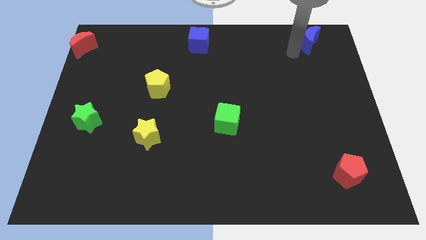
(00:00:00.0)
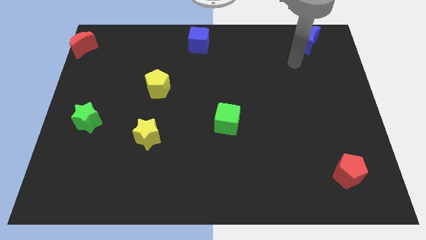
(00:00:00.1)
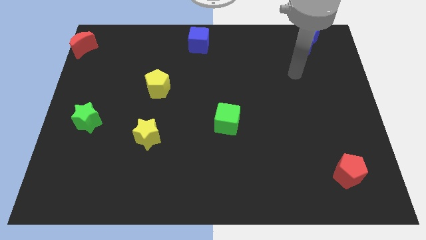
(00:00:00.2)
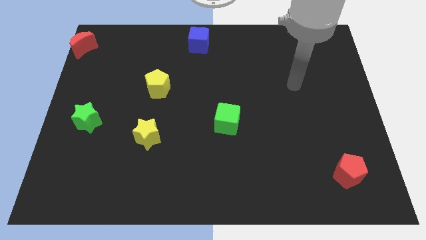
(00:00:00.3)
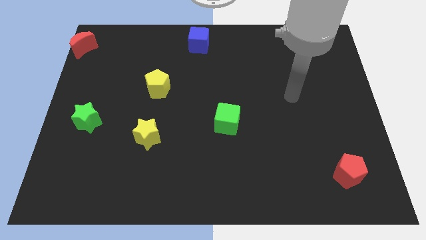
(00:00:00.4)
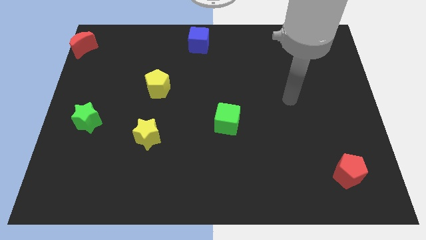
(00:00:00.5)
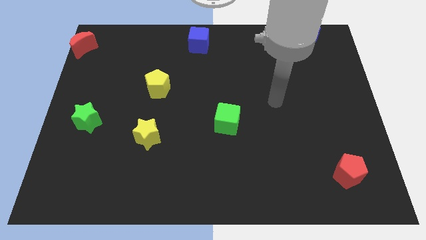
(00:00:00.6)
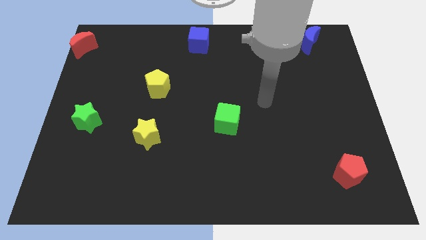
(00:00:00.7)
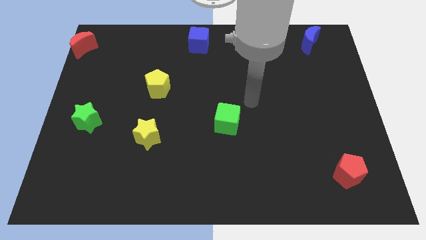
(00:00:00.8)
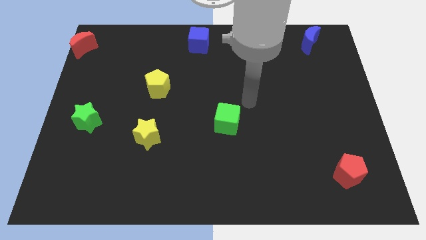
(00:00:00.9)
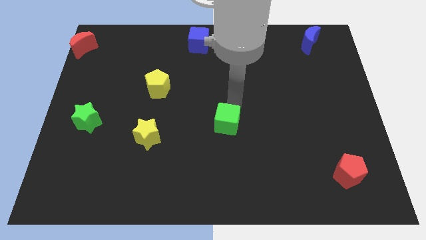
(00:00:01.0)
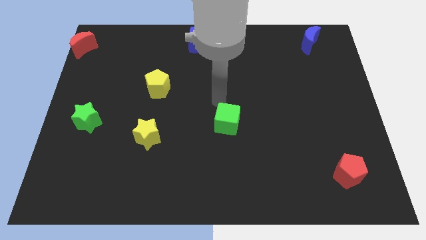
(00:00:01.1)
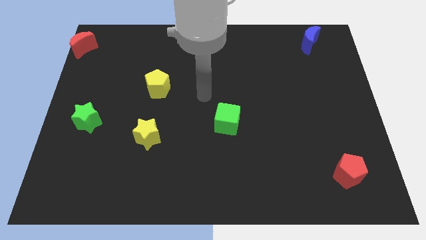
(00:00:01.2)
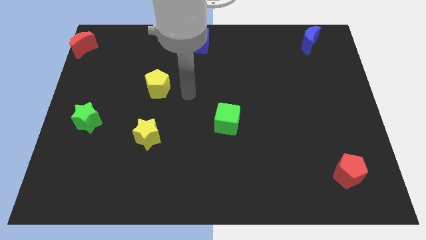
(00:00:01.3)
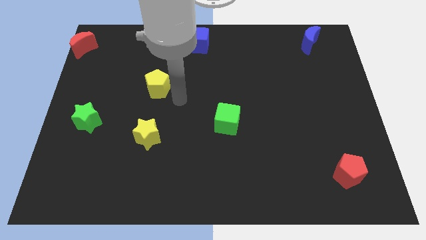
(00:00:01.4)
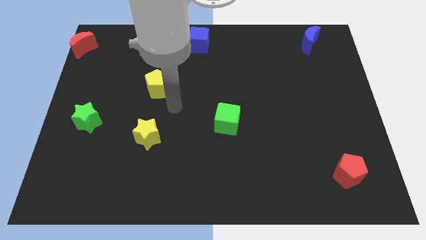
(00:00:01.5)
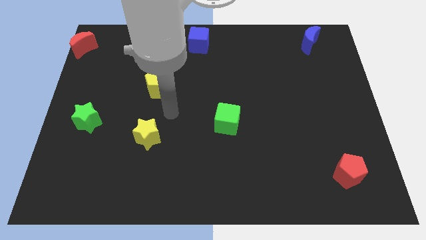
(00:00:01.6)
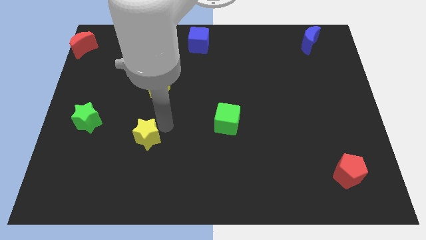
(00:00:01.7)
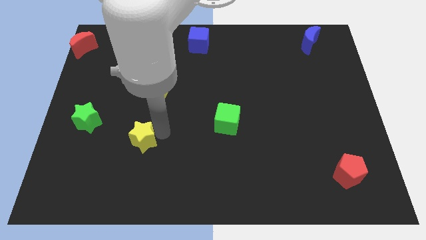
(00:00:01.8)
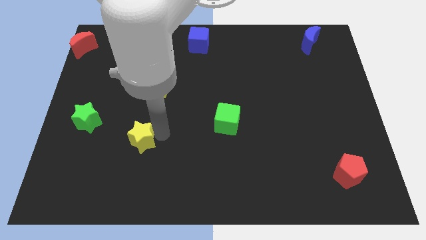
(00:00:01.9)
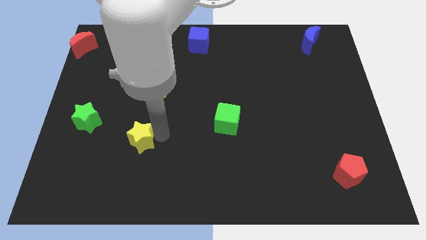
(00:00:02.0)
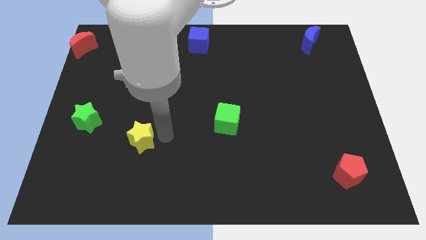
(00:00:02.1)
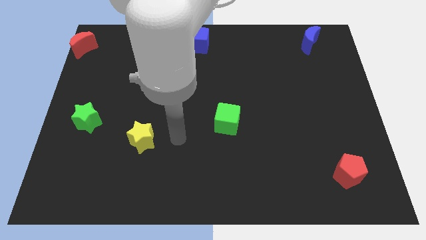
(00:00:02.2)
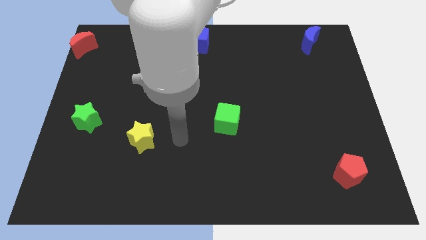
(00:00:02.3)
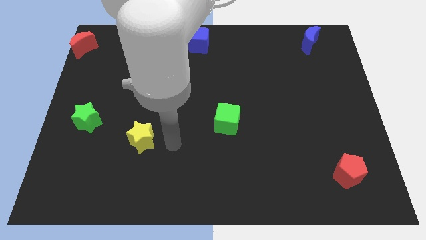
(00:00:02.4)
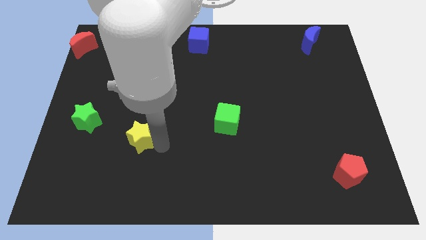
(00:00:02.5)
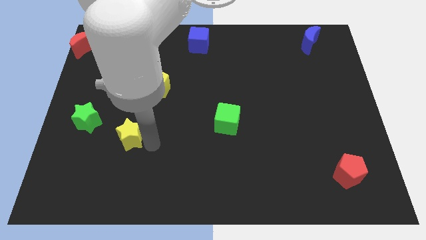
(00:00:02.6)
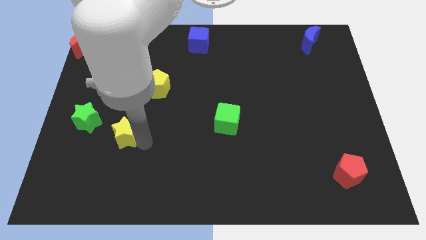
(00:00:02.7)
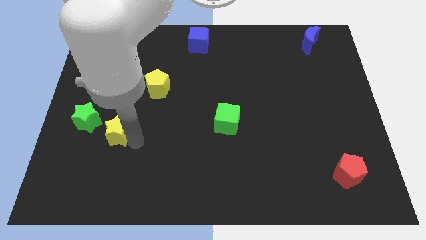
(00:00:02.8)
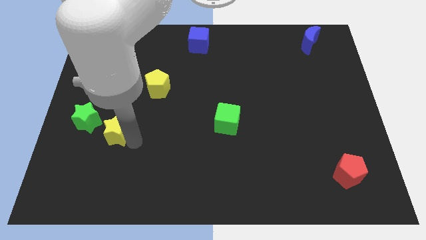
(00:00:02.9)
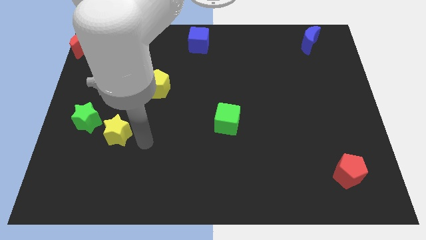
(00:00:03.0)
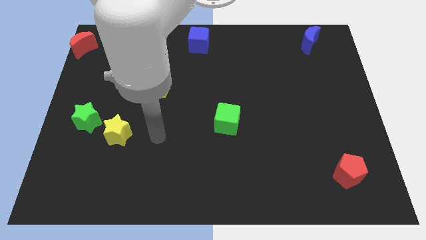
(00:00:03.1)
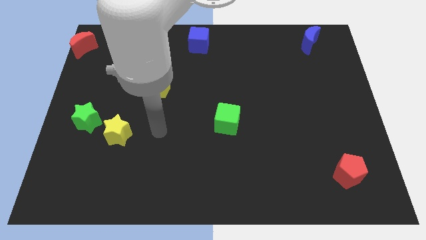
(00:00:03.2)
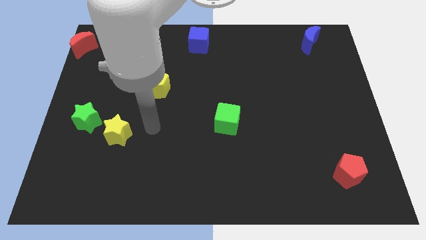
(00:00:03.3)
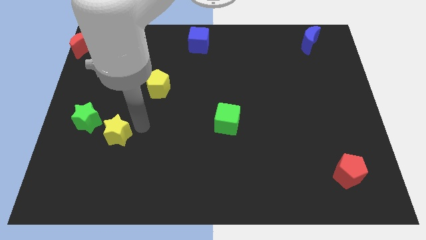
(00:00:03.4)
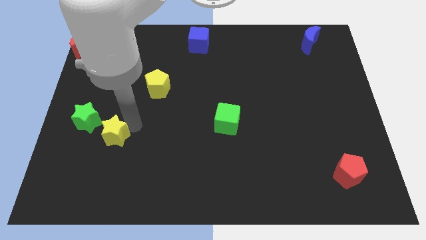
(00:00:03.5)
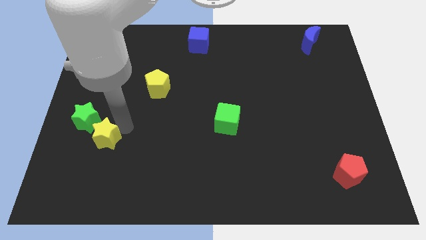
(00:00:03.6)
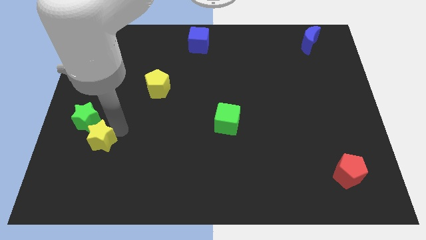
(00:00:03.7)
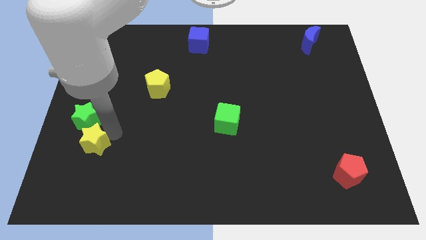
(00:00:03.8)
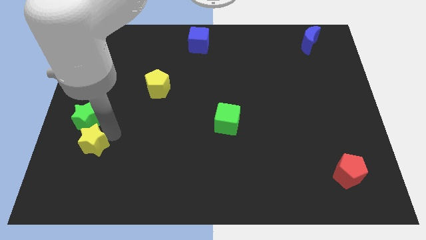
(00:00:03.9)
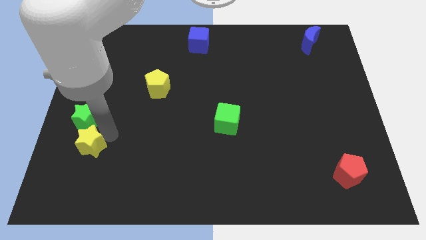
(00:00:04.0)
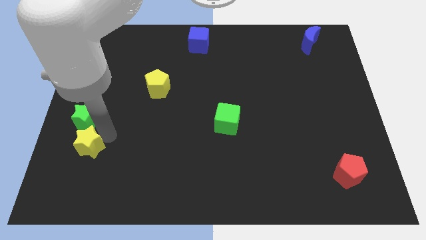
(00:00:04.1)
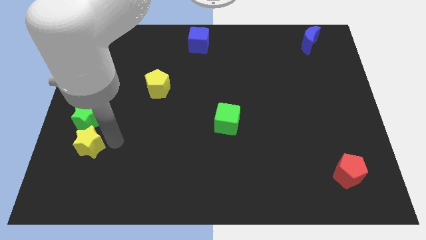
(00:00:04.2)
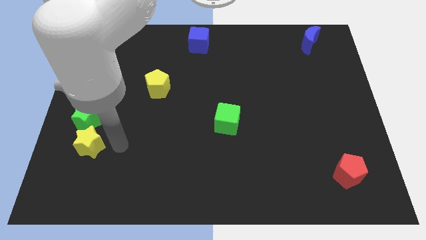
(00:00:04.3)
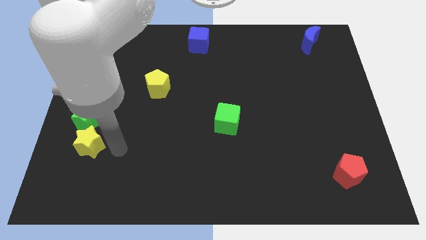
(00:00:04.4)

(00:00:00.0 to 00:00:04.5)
place the yellow star below the green star

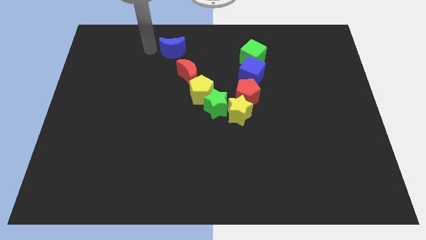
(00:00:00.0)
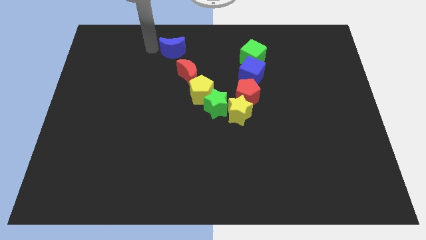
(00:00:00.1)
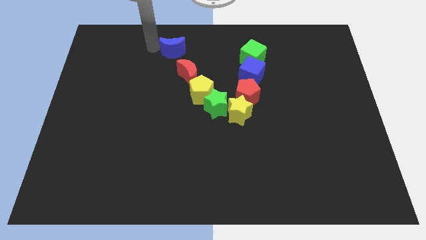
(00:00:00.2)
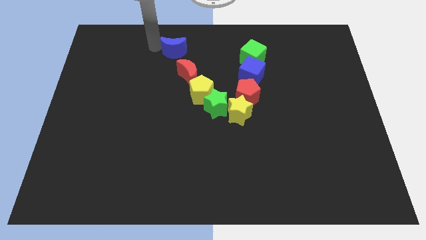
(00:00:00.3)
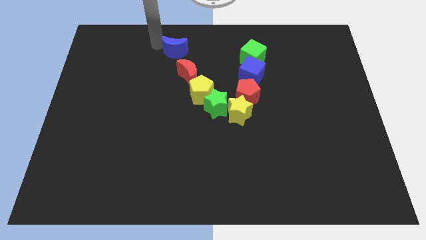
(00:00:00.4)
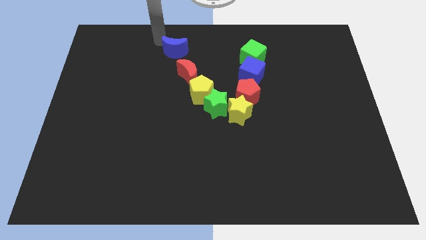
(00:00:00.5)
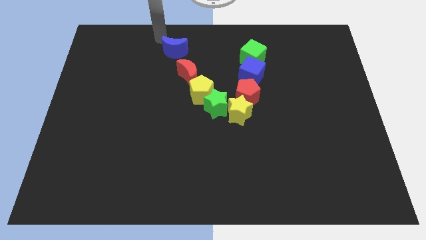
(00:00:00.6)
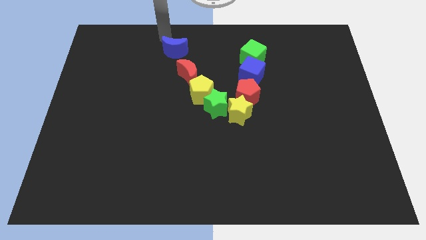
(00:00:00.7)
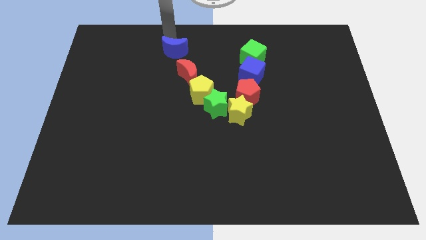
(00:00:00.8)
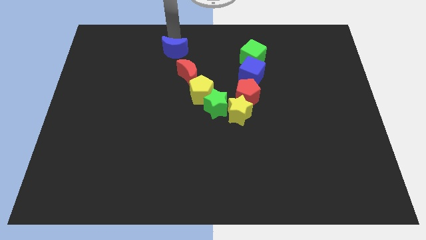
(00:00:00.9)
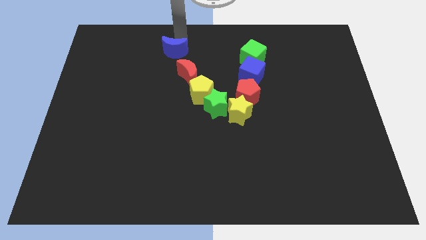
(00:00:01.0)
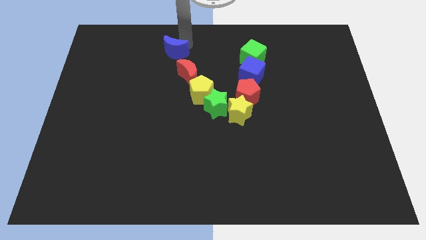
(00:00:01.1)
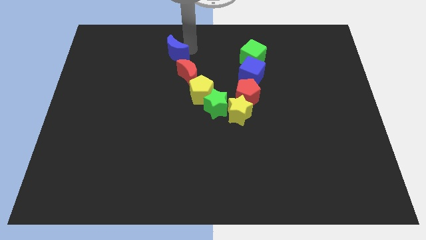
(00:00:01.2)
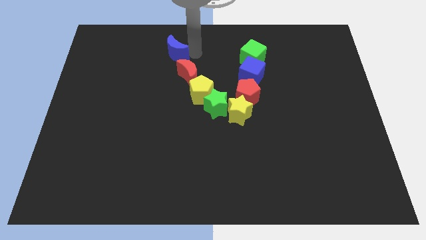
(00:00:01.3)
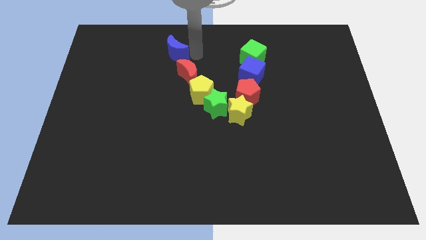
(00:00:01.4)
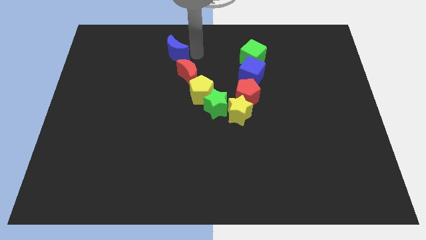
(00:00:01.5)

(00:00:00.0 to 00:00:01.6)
drag the blue moon slightly to the right

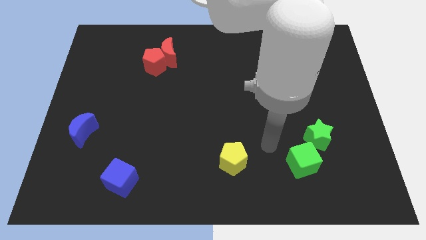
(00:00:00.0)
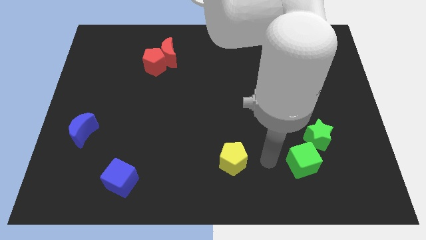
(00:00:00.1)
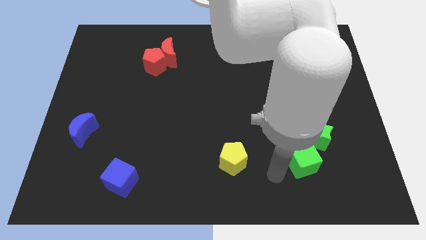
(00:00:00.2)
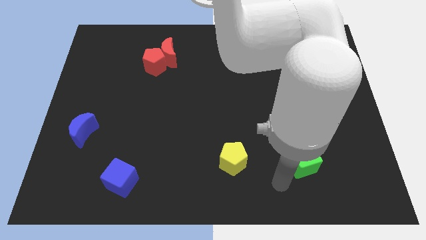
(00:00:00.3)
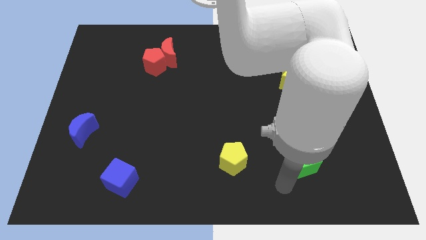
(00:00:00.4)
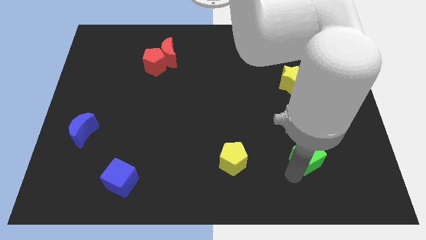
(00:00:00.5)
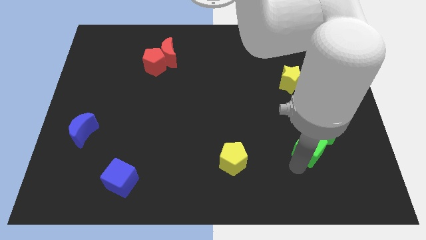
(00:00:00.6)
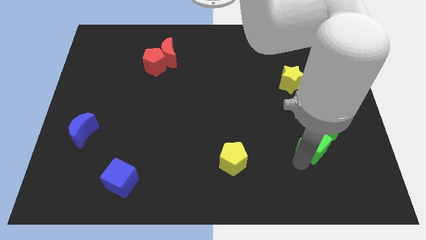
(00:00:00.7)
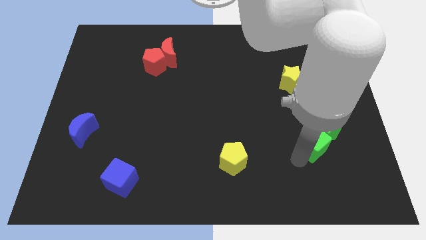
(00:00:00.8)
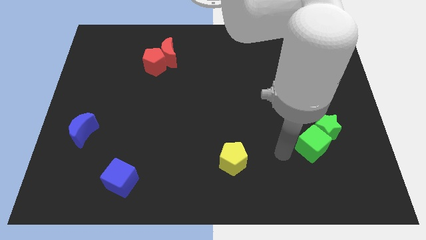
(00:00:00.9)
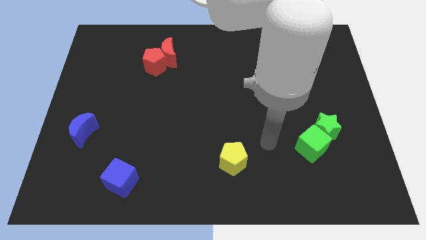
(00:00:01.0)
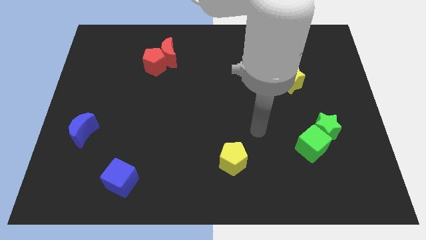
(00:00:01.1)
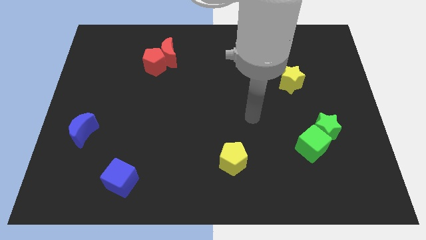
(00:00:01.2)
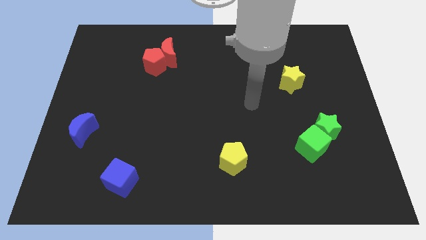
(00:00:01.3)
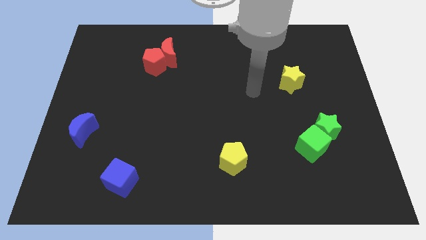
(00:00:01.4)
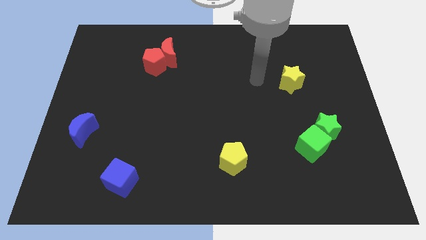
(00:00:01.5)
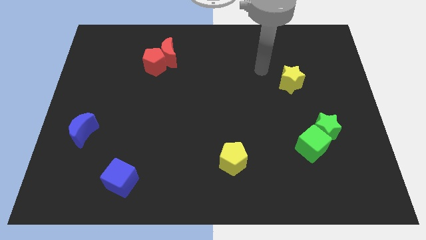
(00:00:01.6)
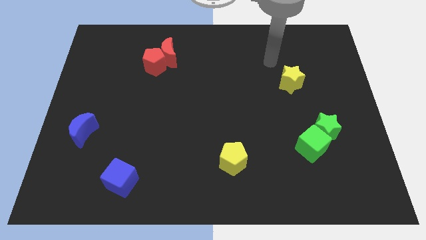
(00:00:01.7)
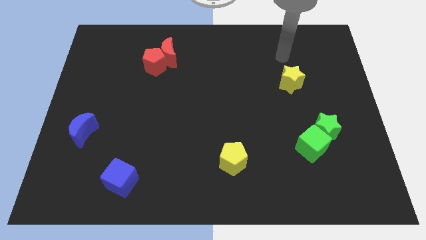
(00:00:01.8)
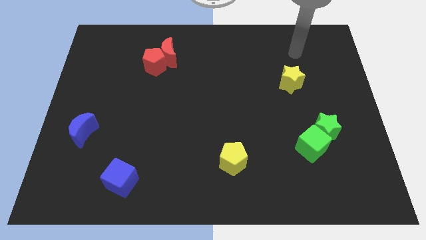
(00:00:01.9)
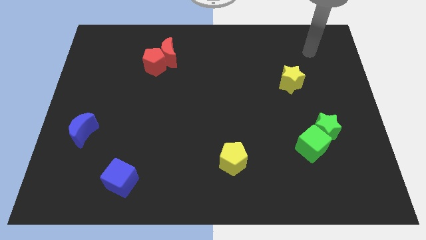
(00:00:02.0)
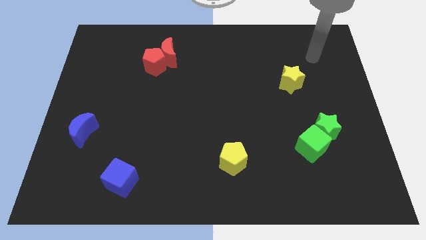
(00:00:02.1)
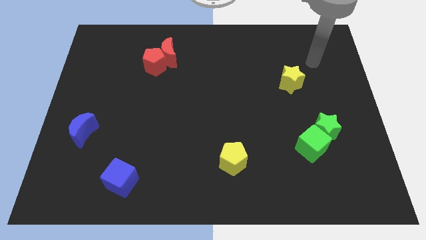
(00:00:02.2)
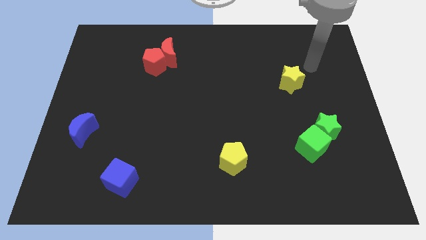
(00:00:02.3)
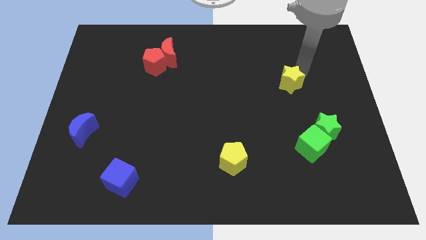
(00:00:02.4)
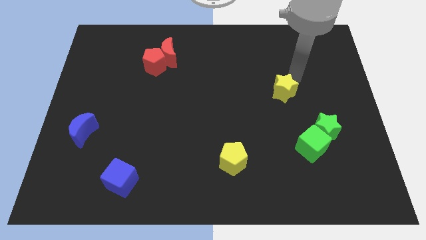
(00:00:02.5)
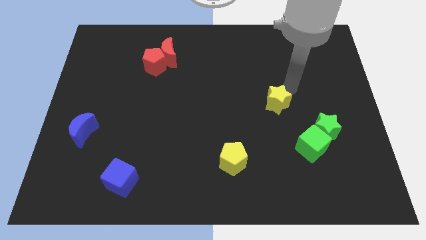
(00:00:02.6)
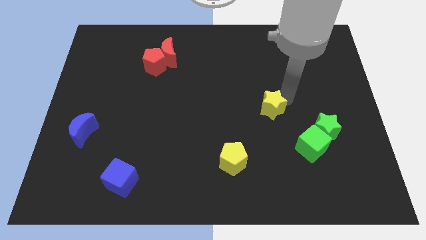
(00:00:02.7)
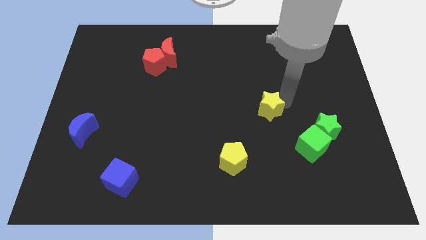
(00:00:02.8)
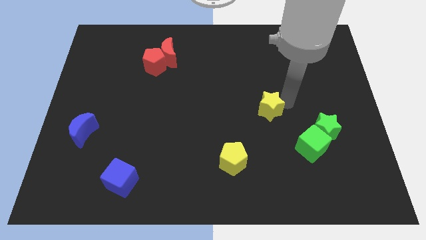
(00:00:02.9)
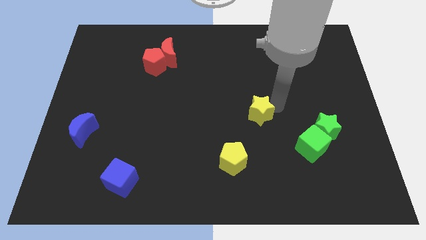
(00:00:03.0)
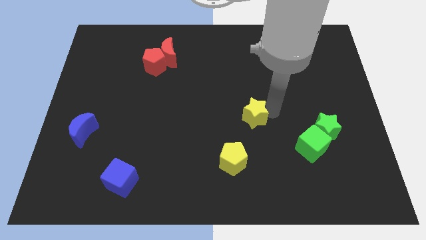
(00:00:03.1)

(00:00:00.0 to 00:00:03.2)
move yellow star downwards
